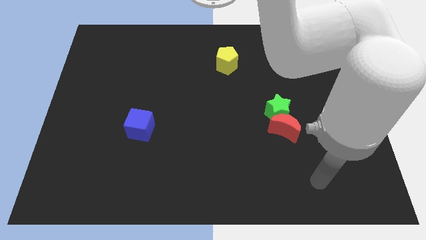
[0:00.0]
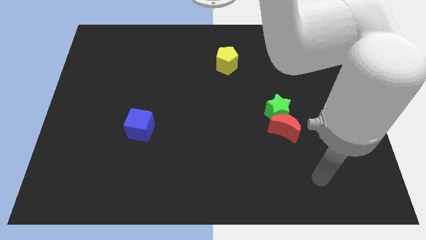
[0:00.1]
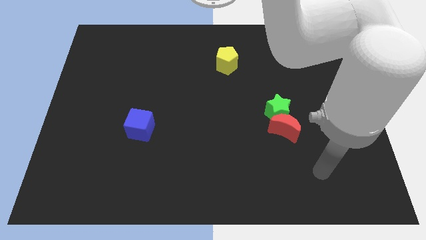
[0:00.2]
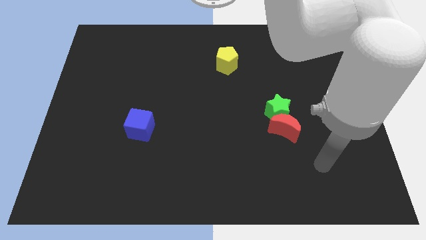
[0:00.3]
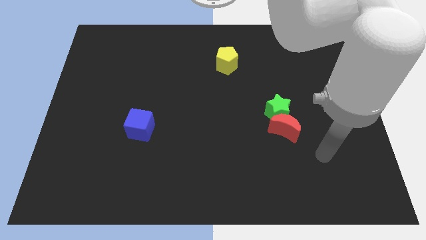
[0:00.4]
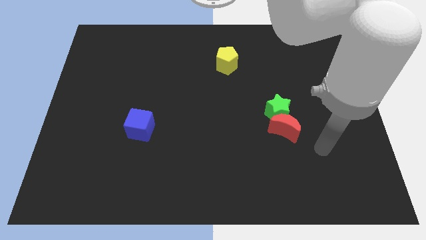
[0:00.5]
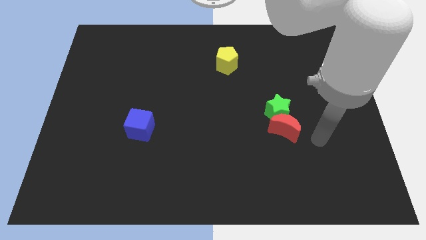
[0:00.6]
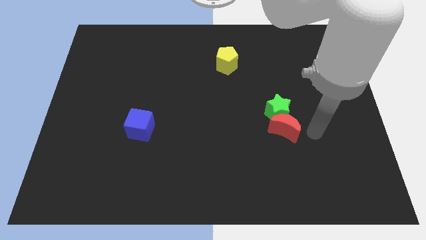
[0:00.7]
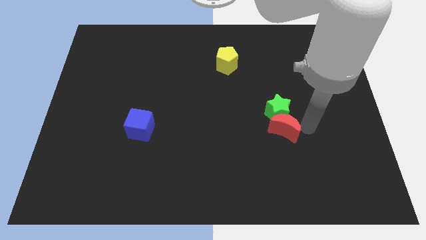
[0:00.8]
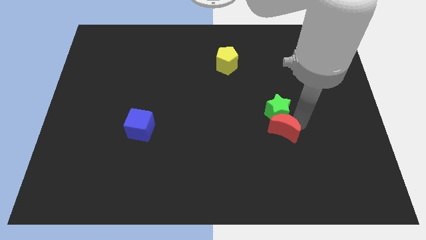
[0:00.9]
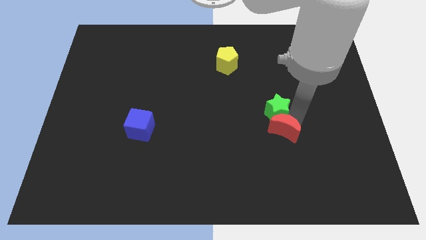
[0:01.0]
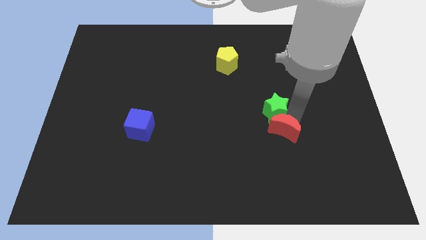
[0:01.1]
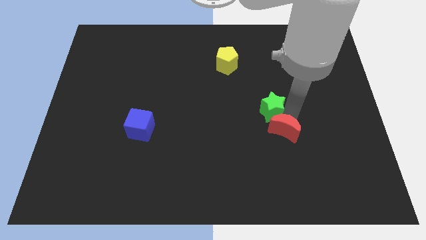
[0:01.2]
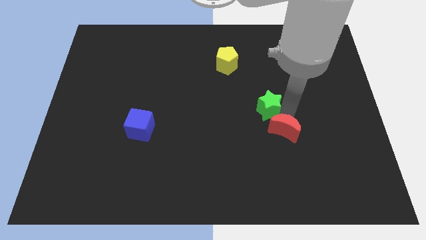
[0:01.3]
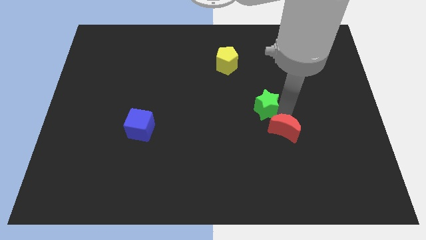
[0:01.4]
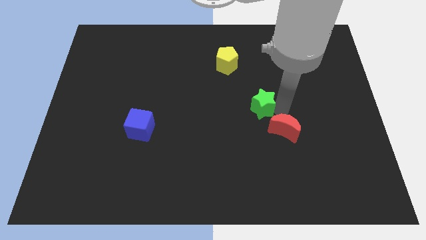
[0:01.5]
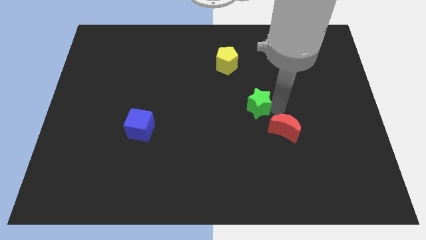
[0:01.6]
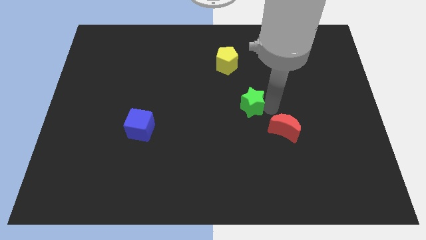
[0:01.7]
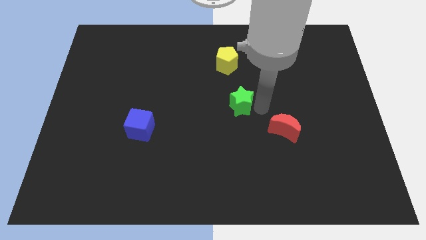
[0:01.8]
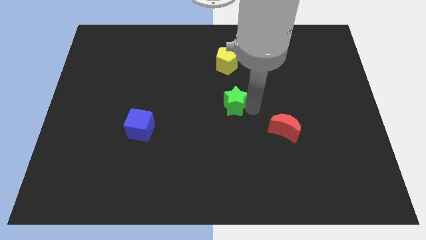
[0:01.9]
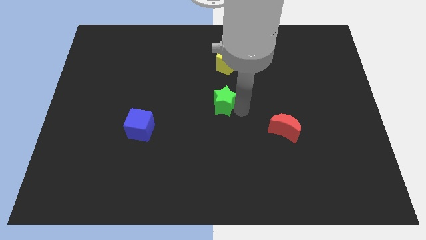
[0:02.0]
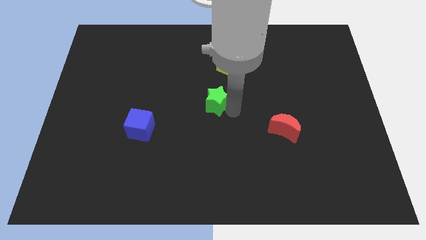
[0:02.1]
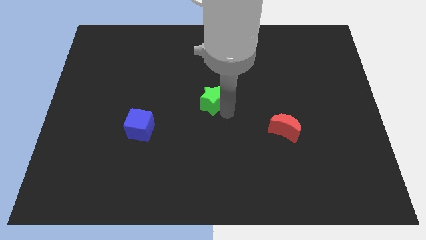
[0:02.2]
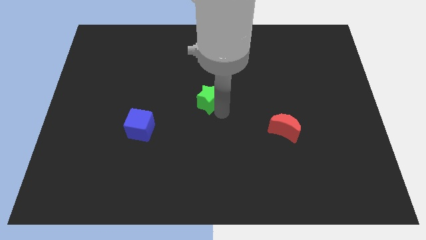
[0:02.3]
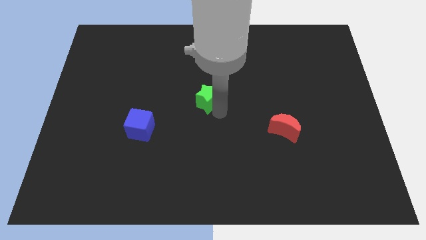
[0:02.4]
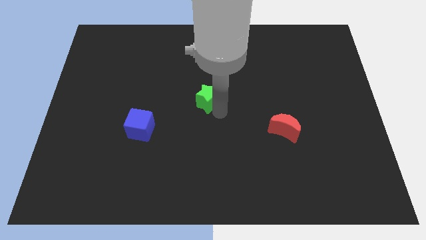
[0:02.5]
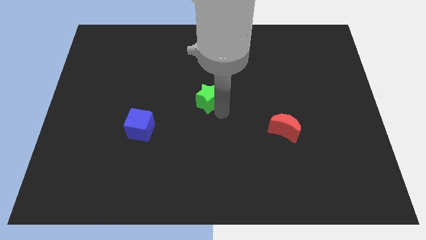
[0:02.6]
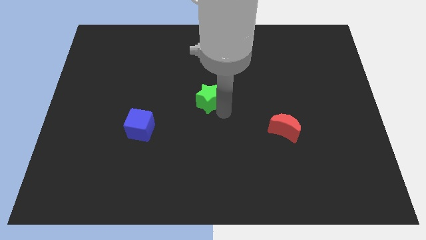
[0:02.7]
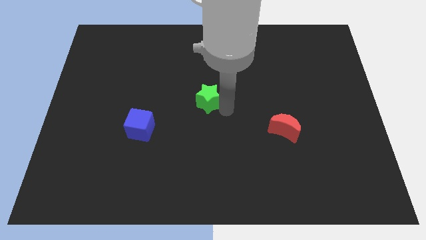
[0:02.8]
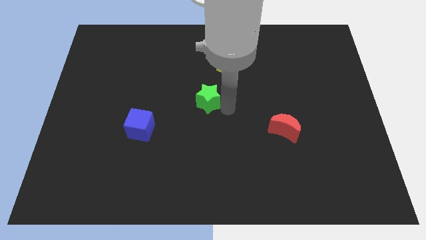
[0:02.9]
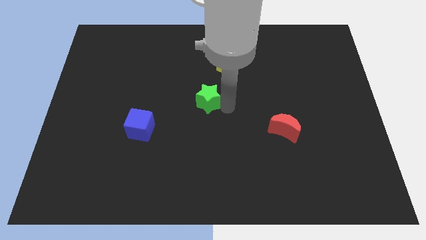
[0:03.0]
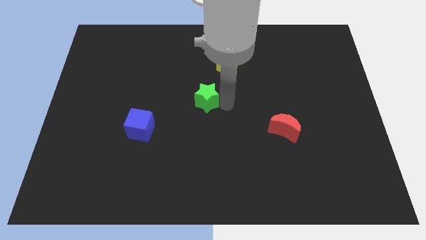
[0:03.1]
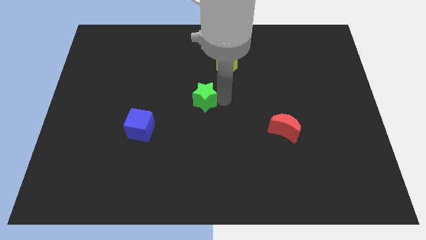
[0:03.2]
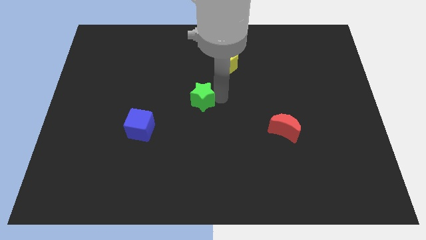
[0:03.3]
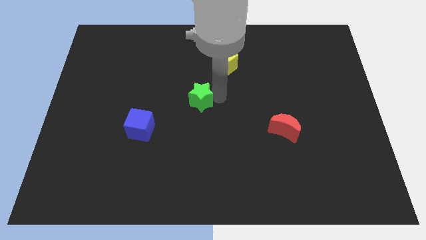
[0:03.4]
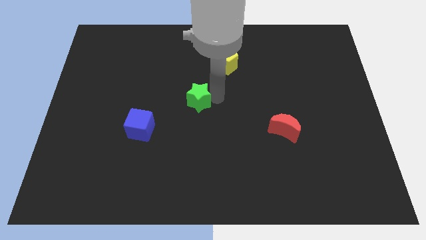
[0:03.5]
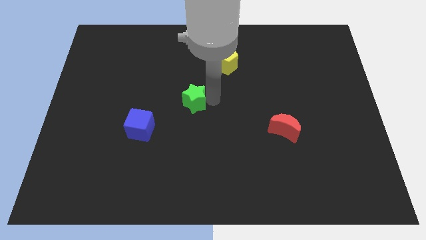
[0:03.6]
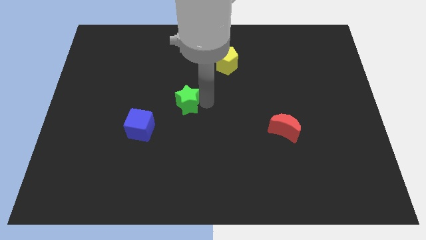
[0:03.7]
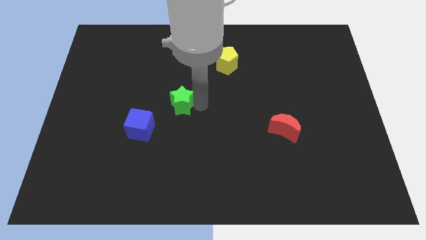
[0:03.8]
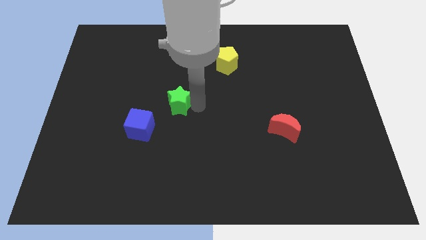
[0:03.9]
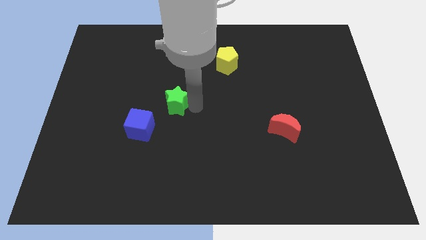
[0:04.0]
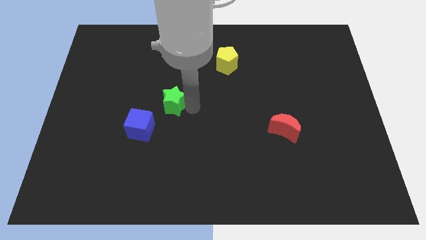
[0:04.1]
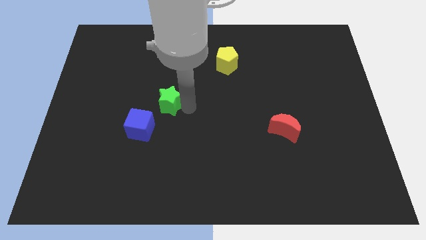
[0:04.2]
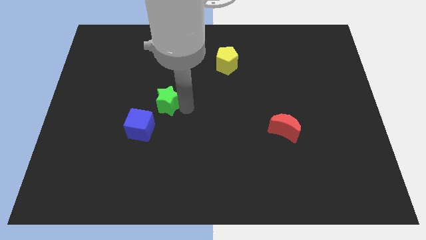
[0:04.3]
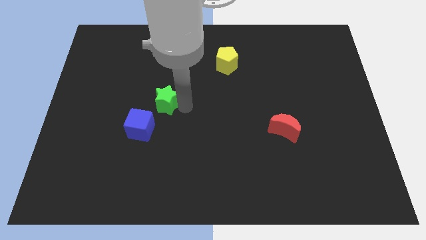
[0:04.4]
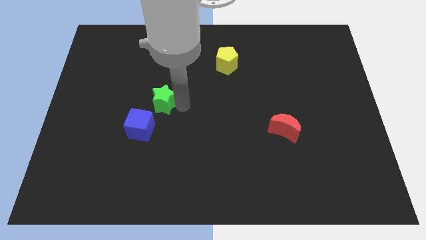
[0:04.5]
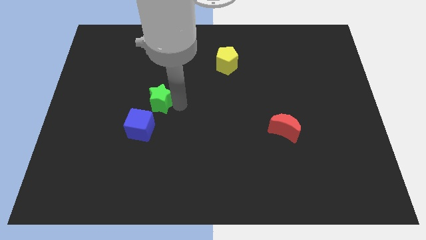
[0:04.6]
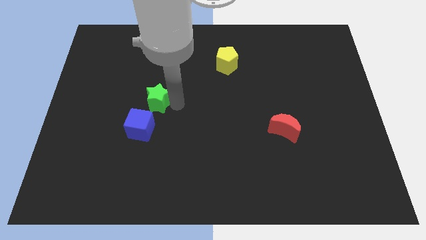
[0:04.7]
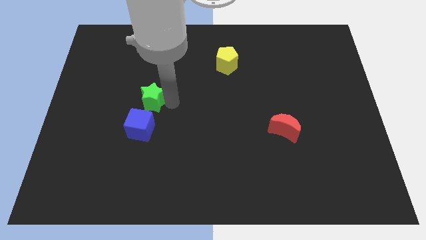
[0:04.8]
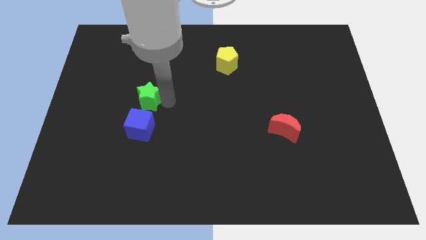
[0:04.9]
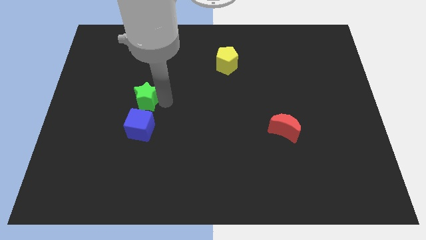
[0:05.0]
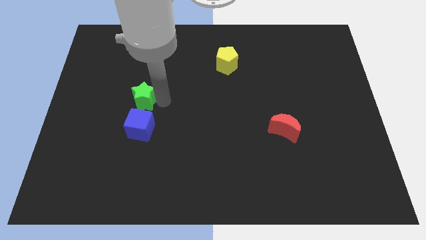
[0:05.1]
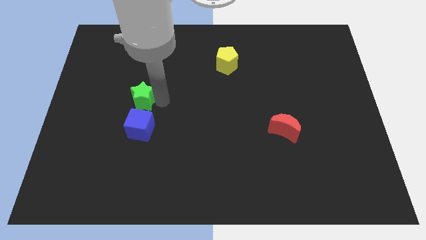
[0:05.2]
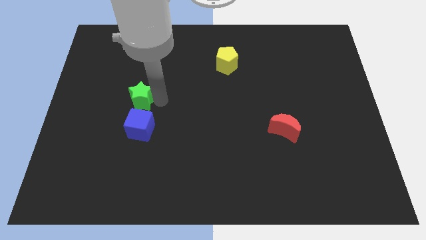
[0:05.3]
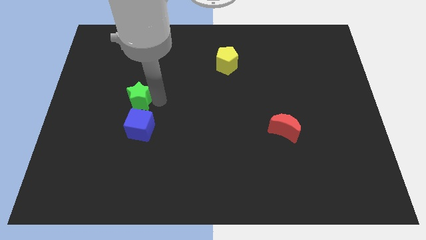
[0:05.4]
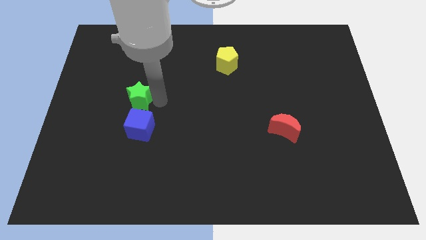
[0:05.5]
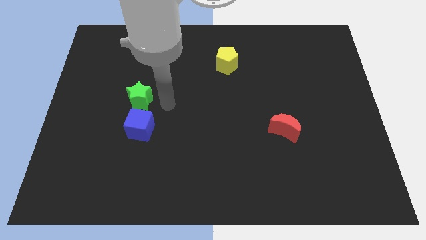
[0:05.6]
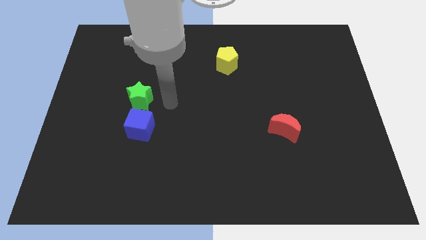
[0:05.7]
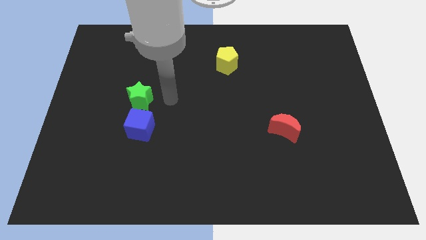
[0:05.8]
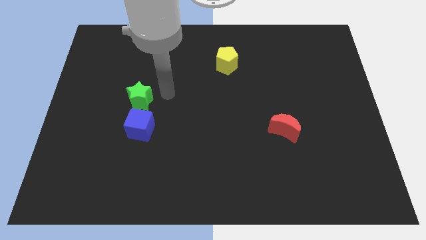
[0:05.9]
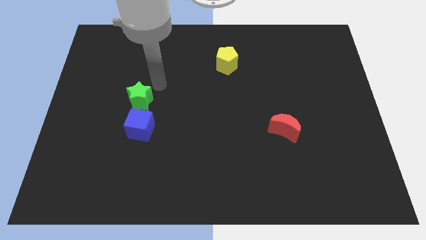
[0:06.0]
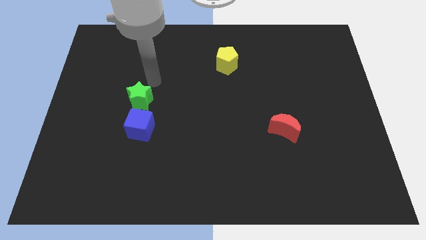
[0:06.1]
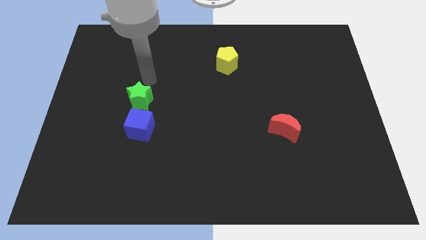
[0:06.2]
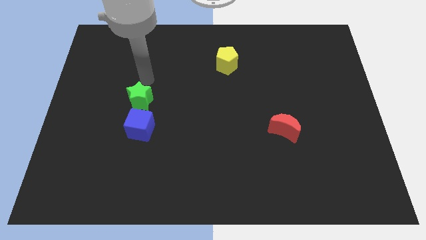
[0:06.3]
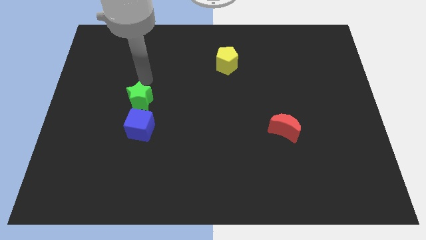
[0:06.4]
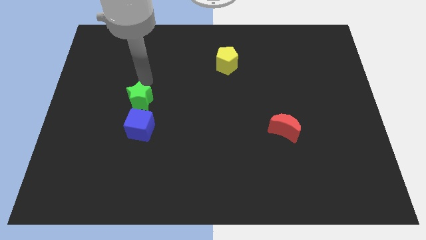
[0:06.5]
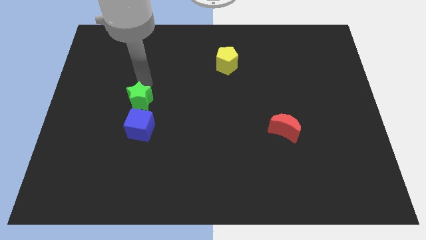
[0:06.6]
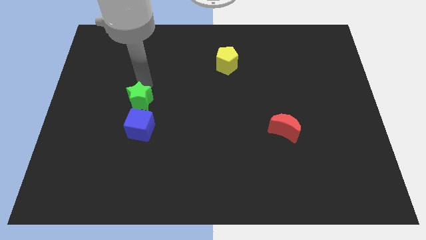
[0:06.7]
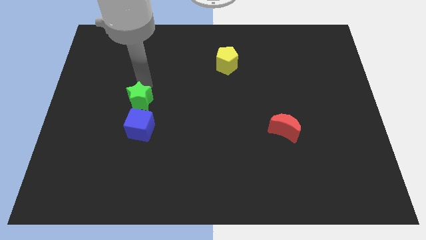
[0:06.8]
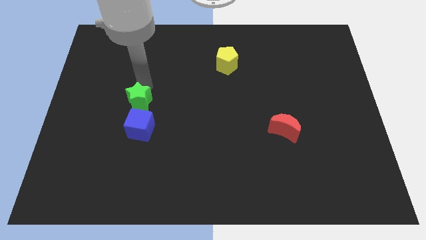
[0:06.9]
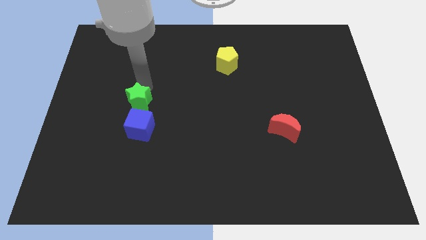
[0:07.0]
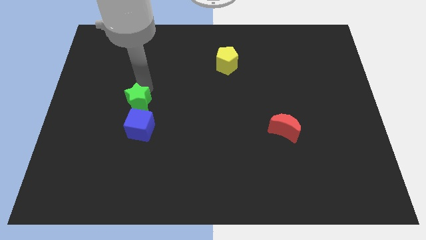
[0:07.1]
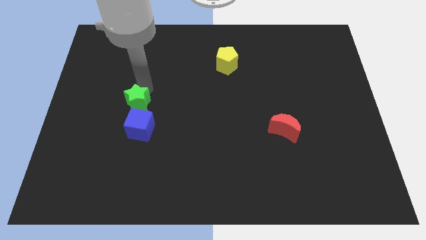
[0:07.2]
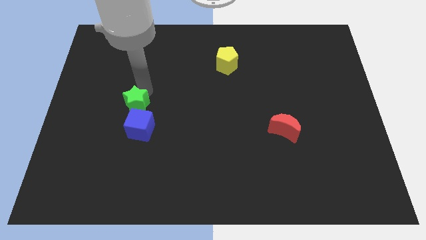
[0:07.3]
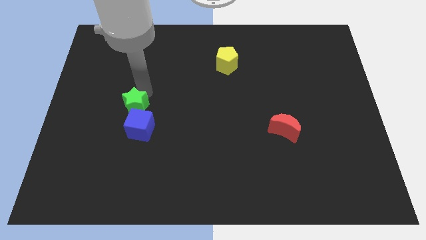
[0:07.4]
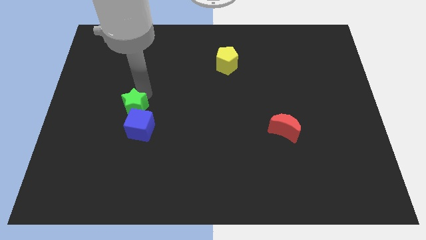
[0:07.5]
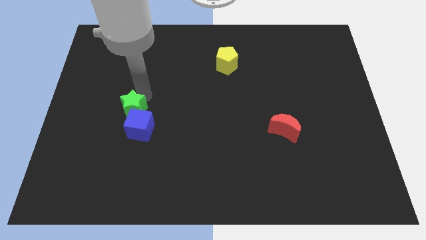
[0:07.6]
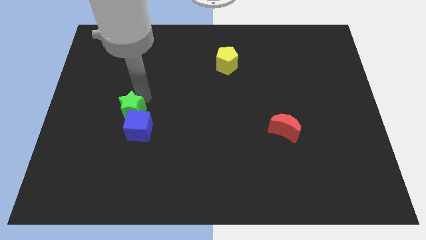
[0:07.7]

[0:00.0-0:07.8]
move the green block next to the blue cube

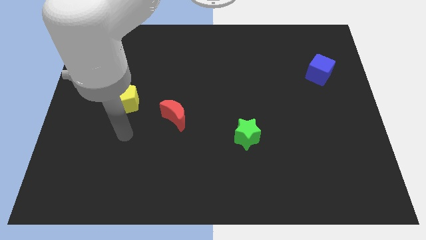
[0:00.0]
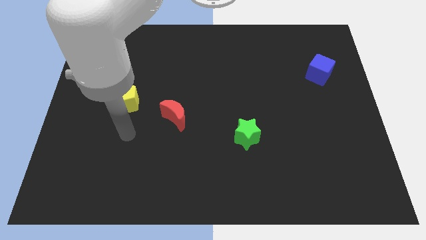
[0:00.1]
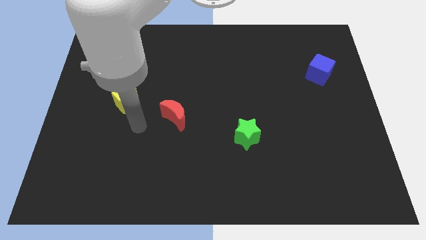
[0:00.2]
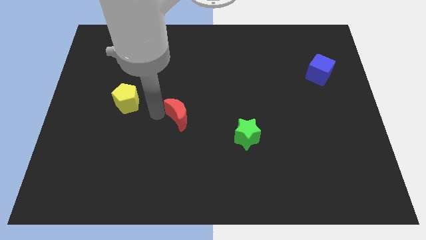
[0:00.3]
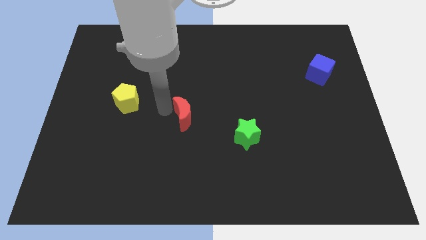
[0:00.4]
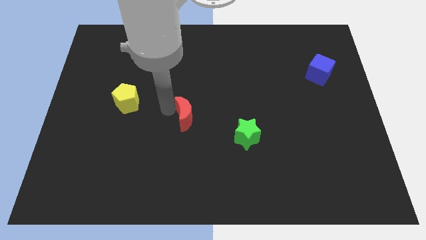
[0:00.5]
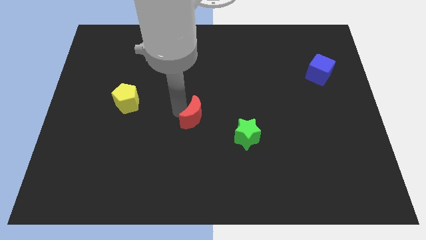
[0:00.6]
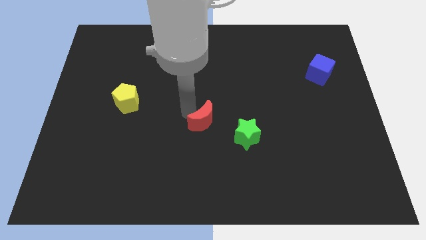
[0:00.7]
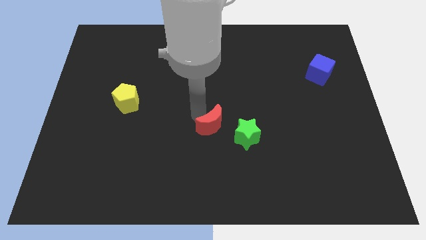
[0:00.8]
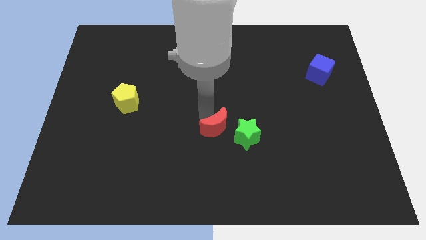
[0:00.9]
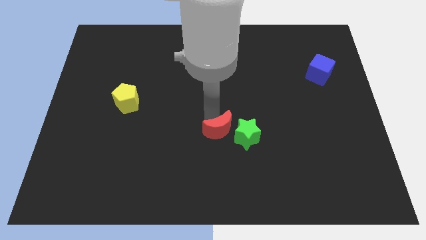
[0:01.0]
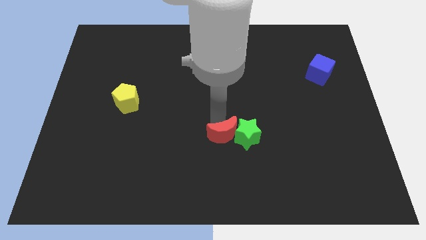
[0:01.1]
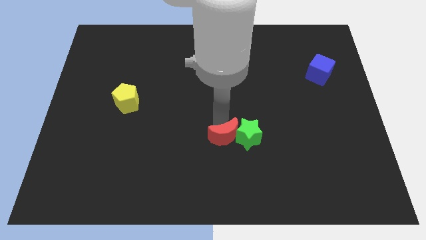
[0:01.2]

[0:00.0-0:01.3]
push the red block to the green block
